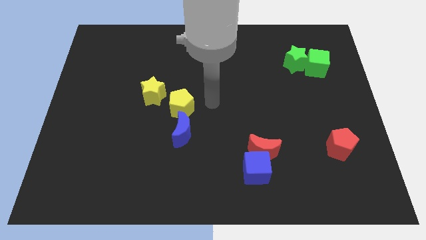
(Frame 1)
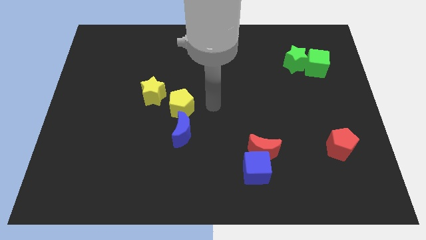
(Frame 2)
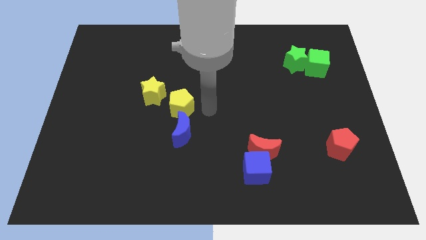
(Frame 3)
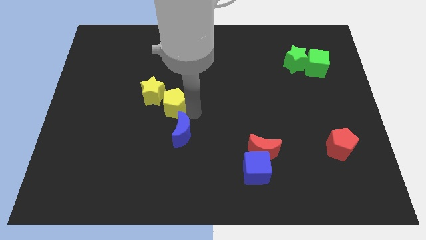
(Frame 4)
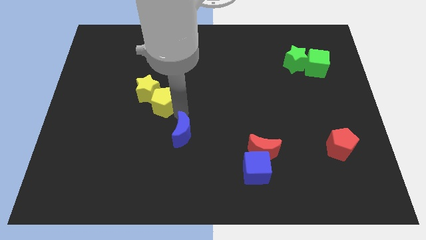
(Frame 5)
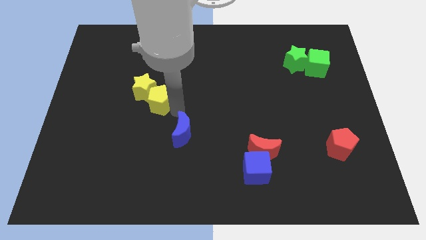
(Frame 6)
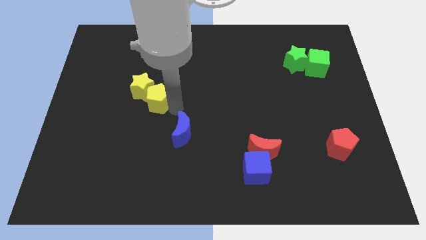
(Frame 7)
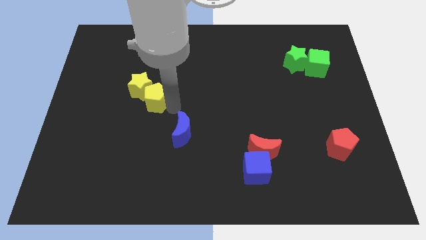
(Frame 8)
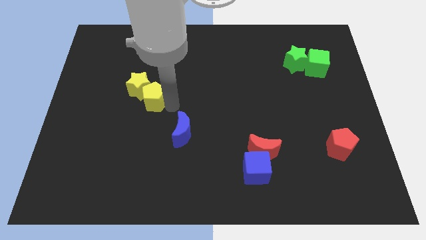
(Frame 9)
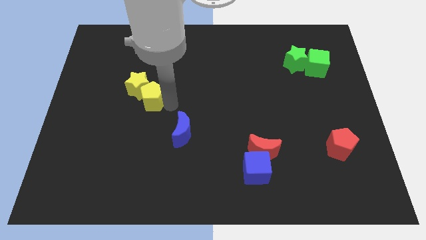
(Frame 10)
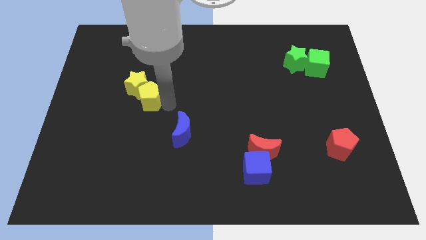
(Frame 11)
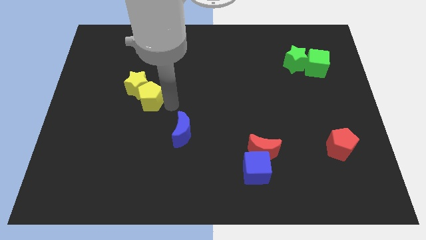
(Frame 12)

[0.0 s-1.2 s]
push yellow pentagon slightly up

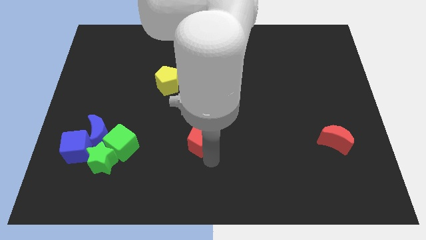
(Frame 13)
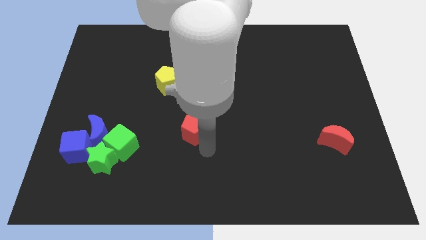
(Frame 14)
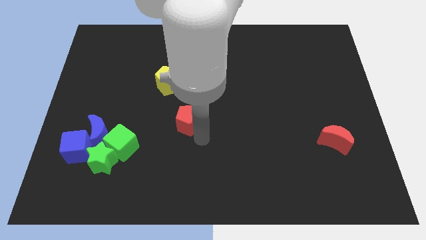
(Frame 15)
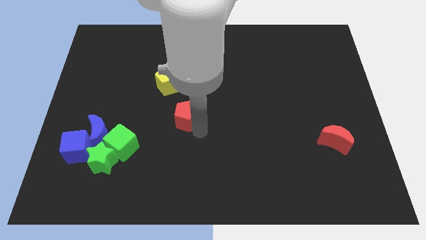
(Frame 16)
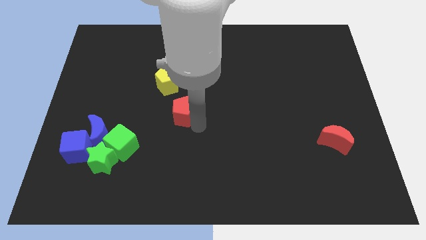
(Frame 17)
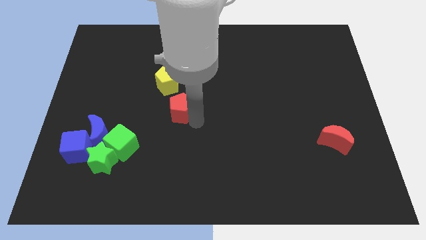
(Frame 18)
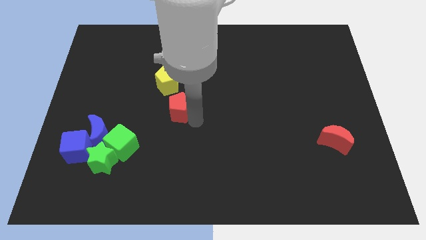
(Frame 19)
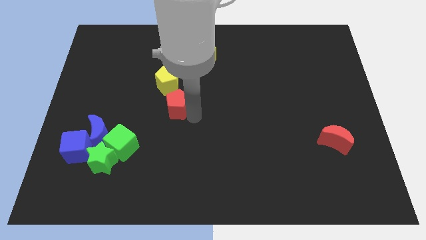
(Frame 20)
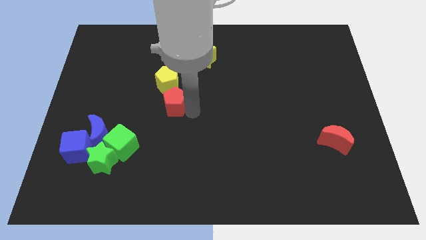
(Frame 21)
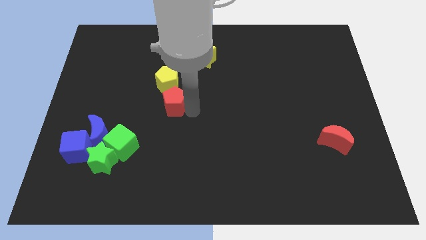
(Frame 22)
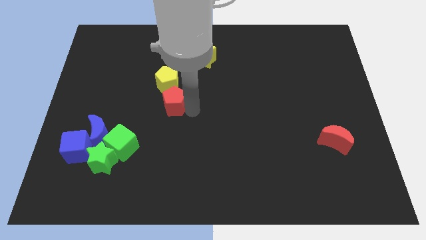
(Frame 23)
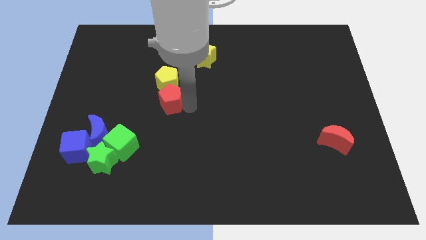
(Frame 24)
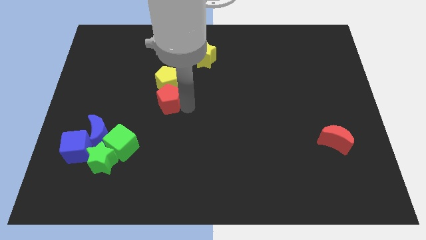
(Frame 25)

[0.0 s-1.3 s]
push the red pentagon towards the yellow pentagon on the top left of the board

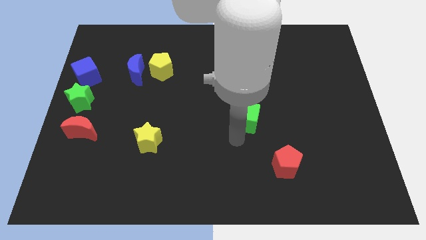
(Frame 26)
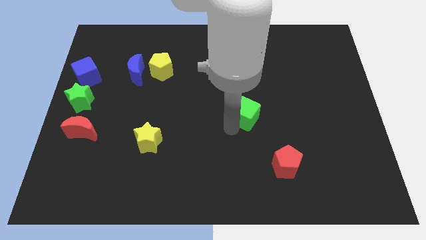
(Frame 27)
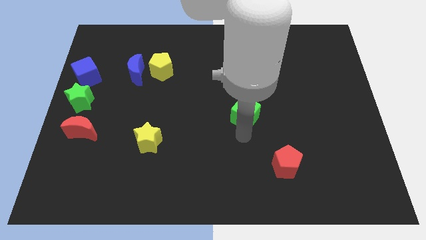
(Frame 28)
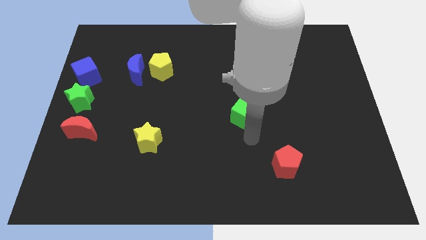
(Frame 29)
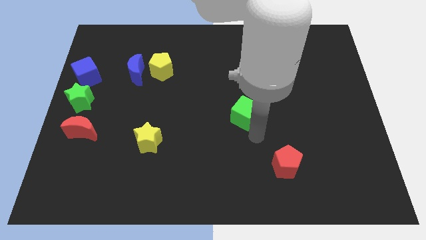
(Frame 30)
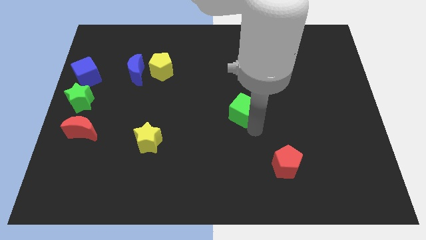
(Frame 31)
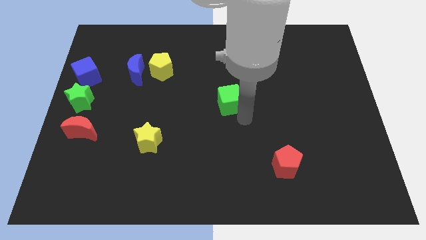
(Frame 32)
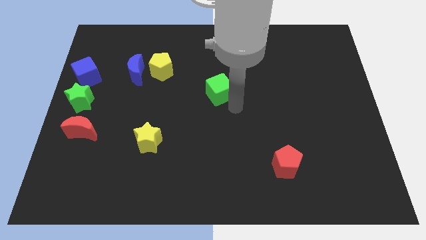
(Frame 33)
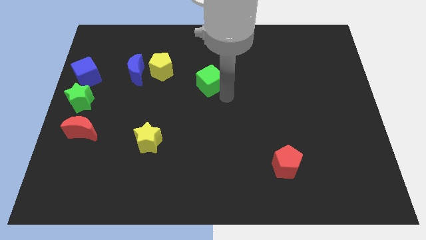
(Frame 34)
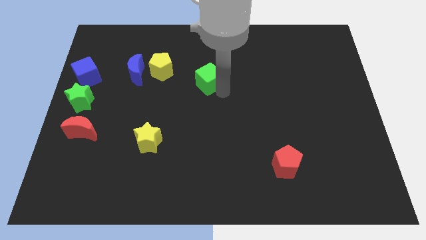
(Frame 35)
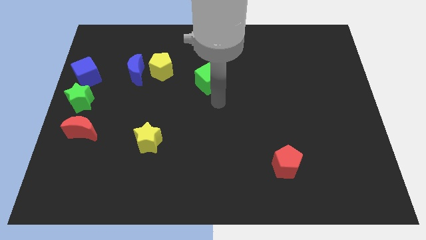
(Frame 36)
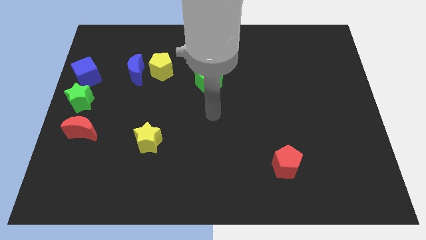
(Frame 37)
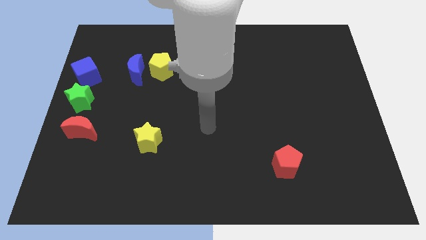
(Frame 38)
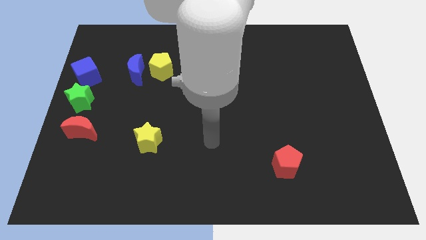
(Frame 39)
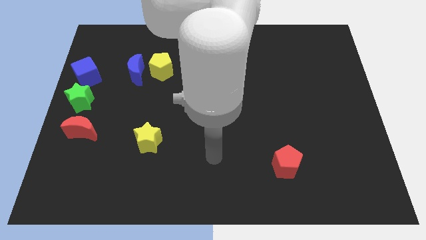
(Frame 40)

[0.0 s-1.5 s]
place the green cube slightly upwards to the top center of the board

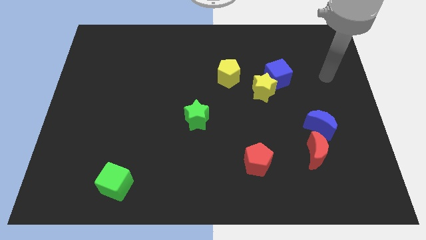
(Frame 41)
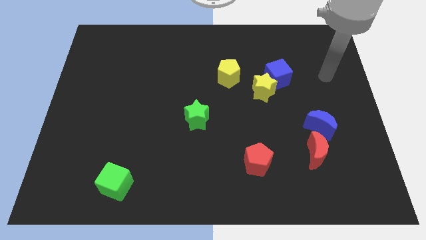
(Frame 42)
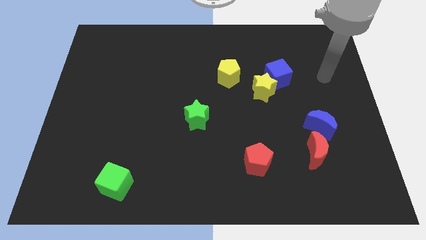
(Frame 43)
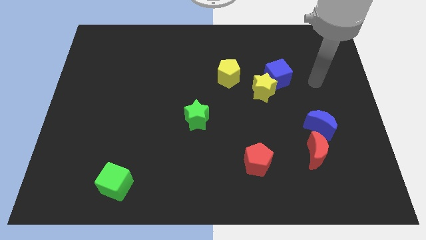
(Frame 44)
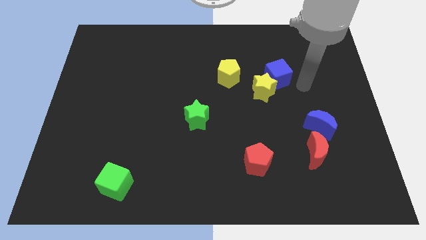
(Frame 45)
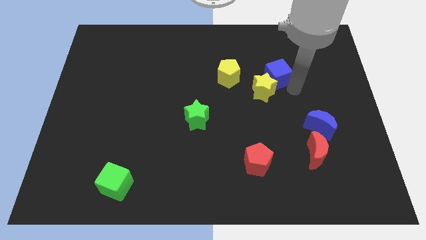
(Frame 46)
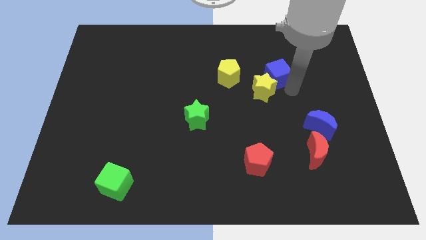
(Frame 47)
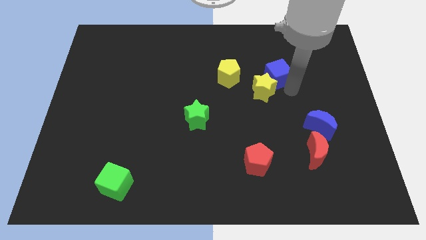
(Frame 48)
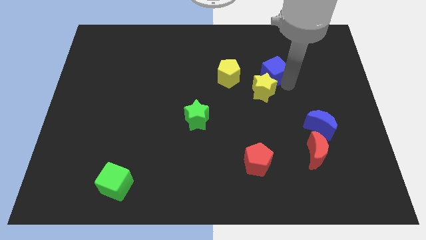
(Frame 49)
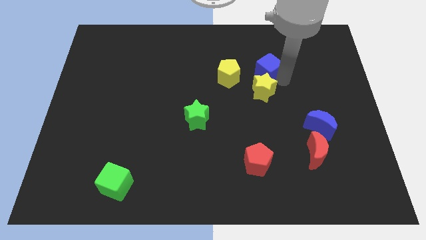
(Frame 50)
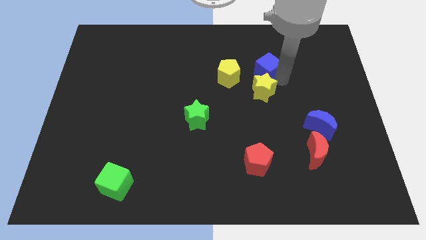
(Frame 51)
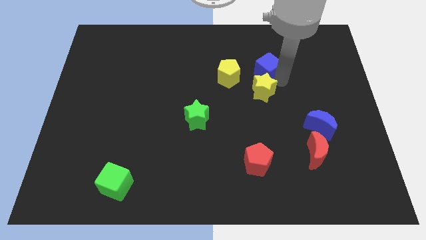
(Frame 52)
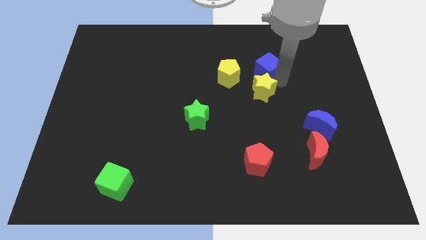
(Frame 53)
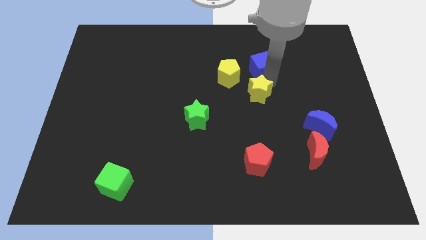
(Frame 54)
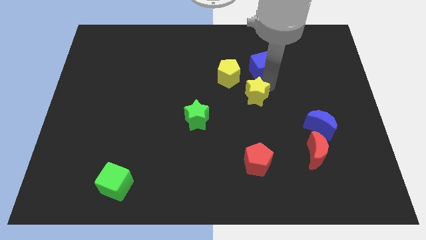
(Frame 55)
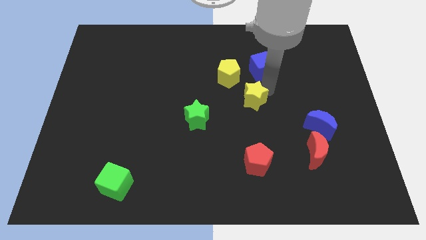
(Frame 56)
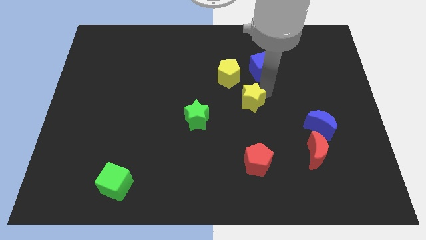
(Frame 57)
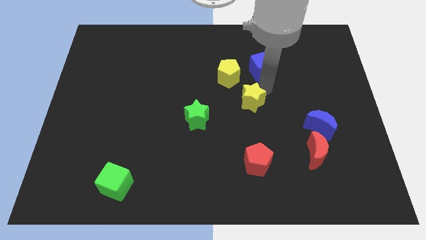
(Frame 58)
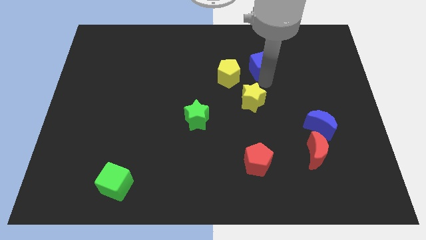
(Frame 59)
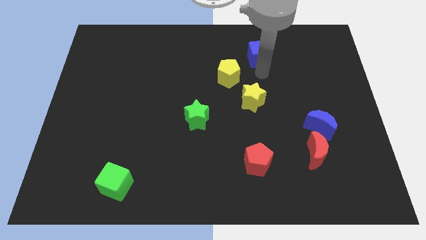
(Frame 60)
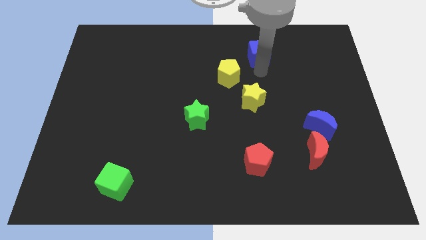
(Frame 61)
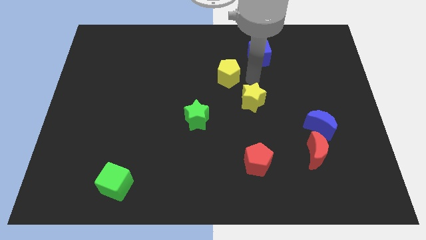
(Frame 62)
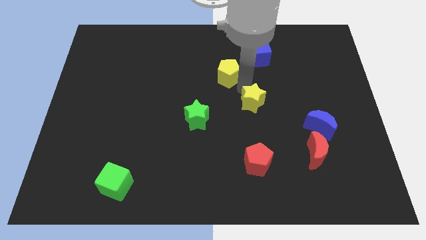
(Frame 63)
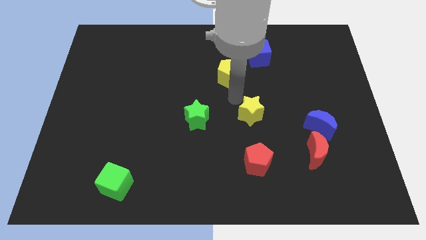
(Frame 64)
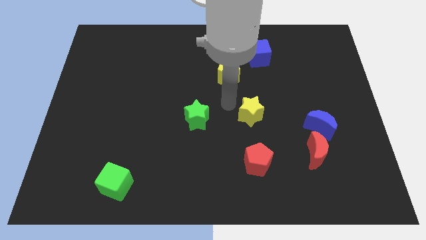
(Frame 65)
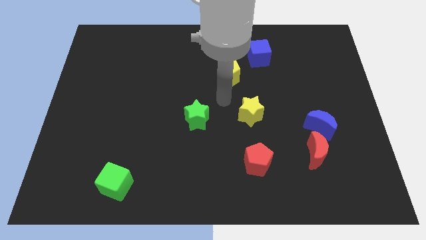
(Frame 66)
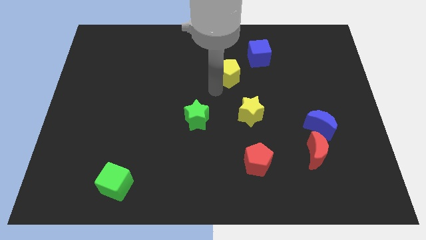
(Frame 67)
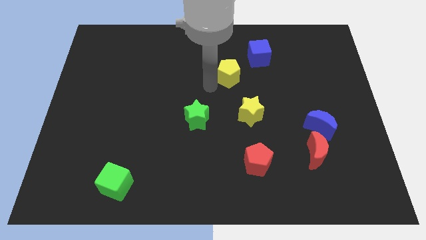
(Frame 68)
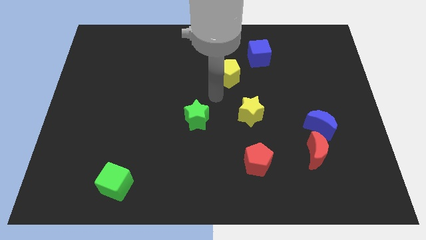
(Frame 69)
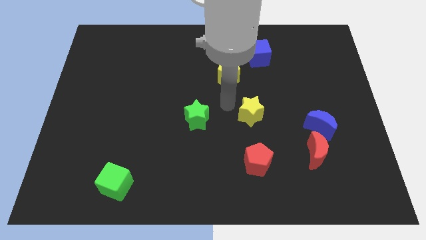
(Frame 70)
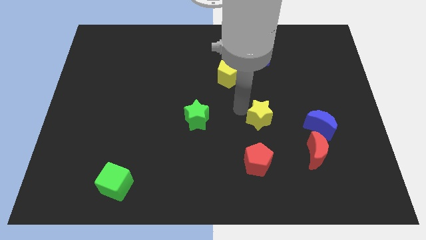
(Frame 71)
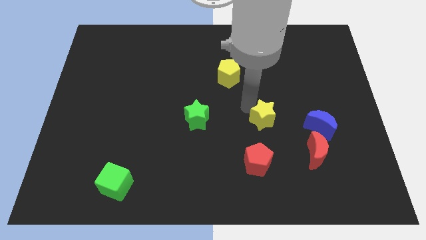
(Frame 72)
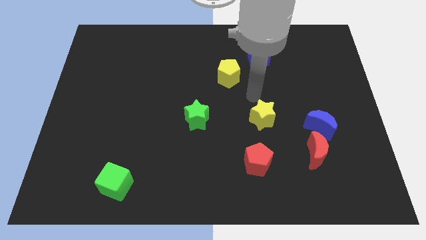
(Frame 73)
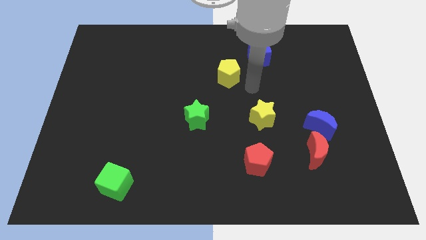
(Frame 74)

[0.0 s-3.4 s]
put the yellow star vertically below the blue cube

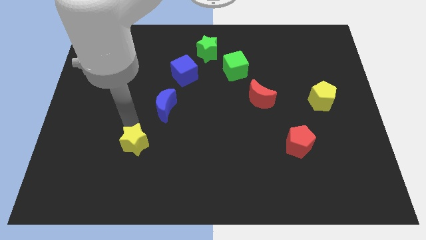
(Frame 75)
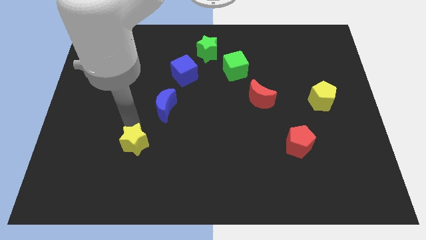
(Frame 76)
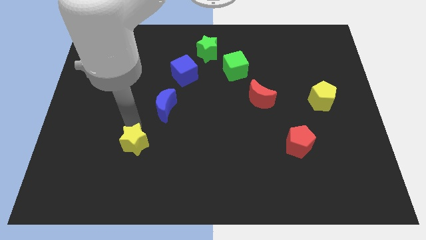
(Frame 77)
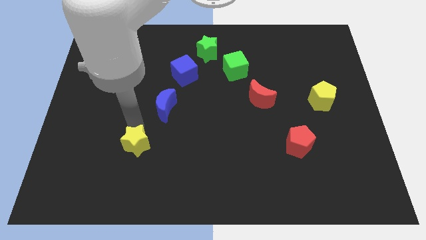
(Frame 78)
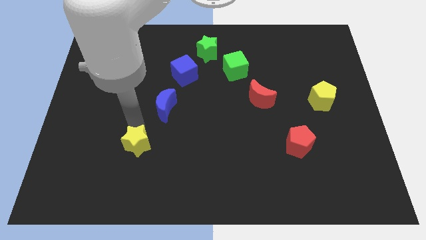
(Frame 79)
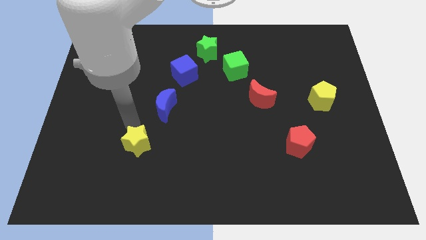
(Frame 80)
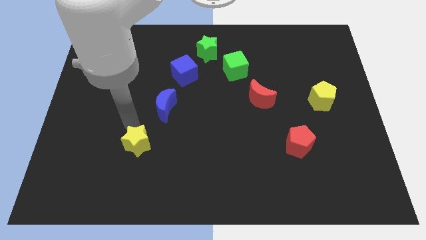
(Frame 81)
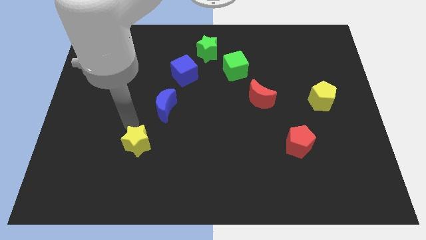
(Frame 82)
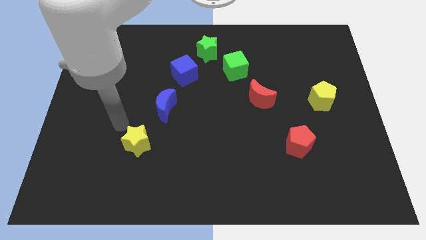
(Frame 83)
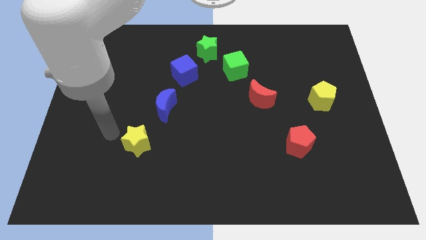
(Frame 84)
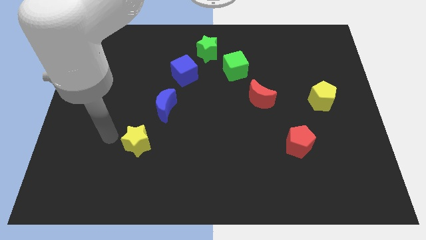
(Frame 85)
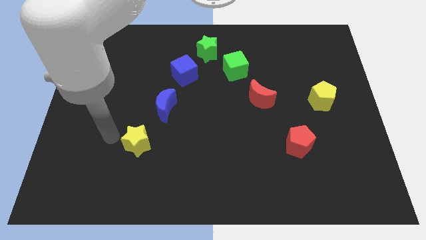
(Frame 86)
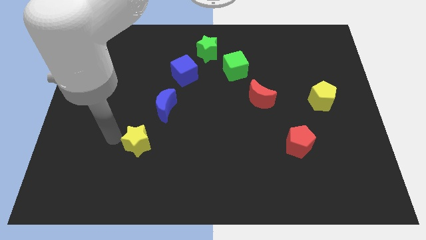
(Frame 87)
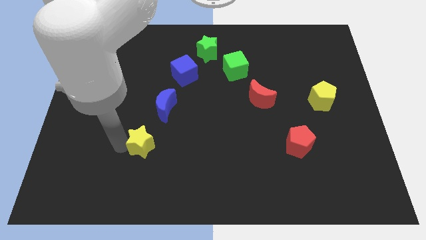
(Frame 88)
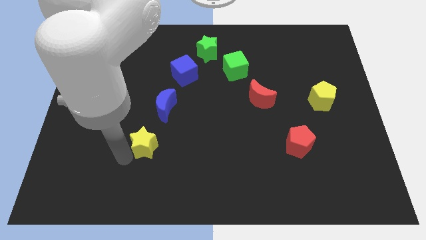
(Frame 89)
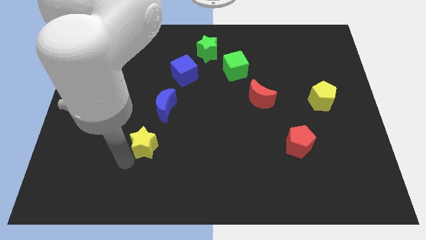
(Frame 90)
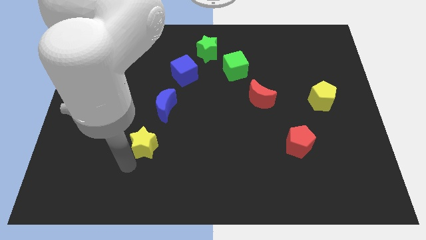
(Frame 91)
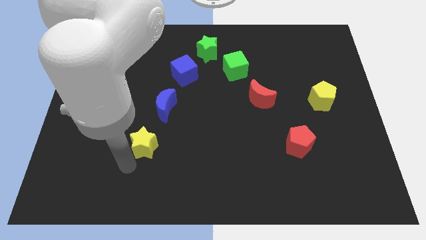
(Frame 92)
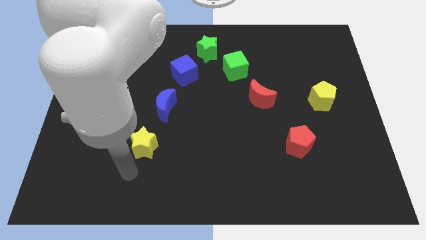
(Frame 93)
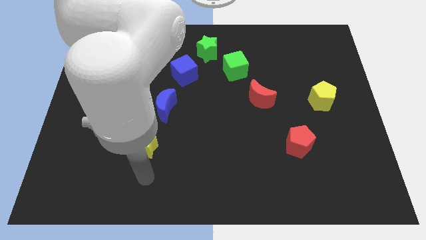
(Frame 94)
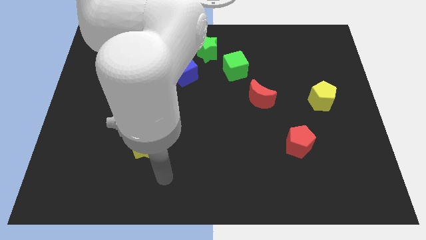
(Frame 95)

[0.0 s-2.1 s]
drag the yellow star horizontally left of the red pentagon
